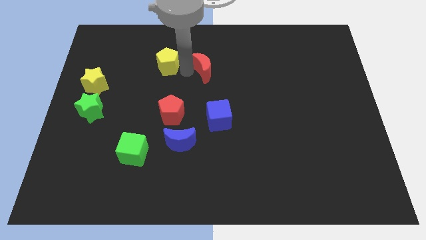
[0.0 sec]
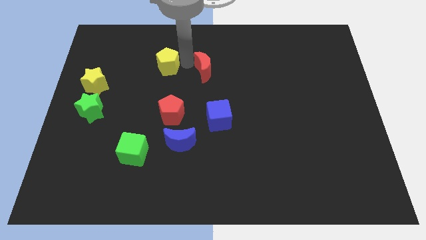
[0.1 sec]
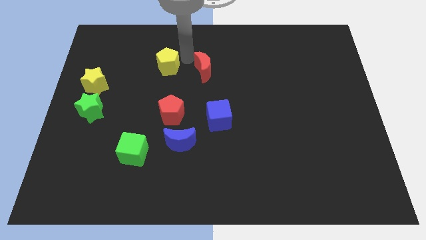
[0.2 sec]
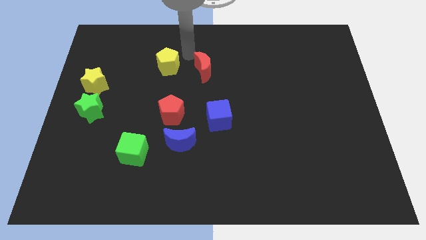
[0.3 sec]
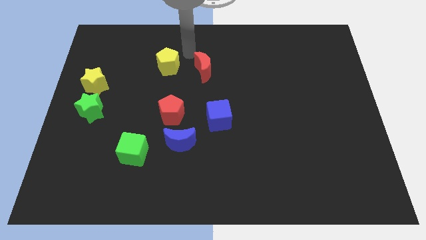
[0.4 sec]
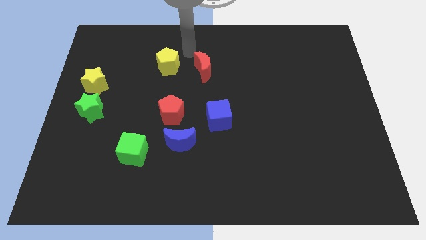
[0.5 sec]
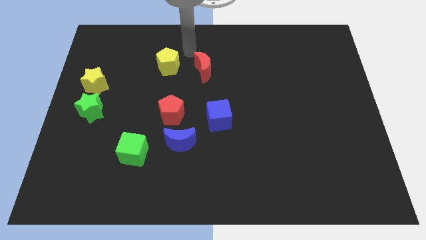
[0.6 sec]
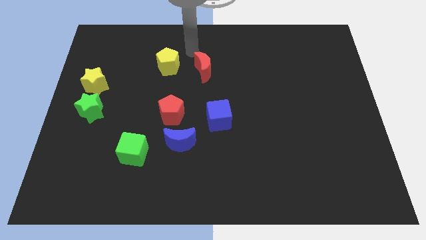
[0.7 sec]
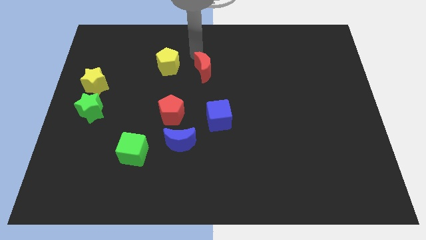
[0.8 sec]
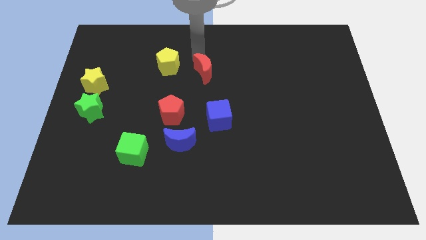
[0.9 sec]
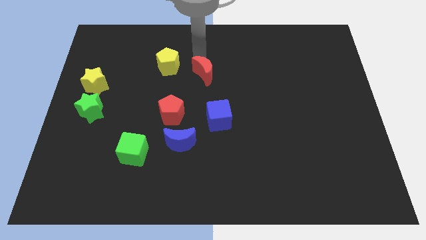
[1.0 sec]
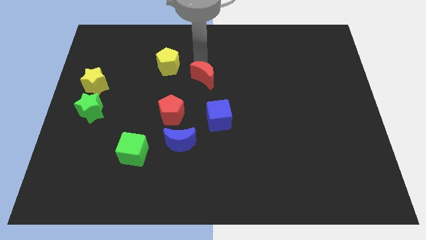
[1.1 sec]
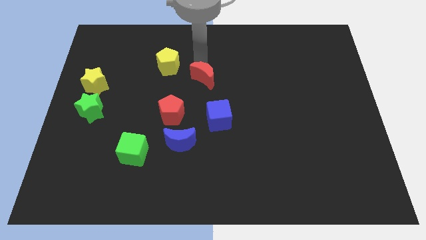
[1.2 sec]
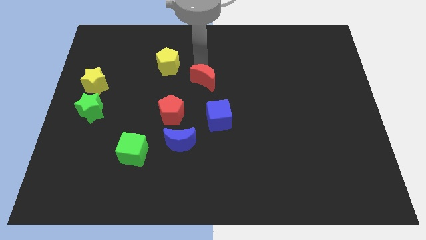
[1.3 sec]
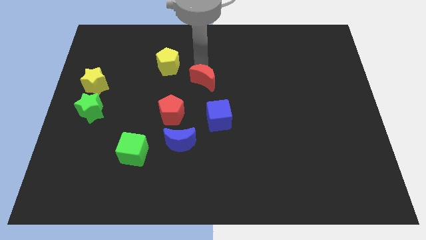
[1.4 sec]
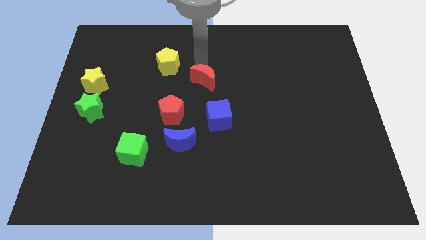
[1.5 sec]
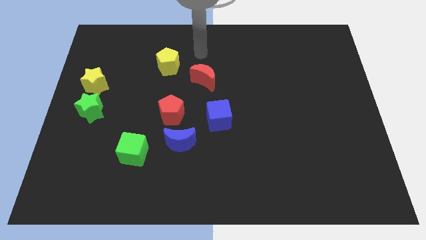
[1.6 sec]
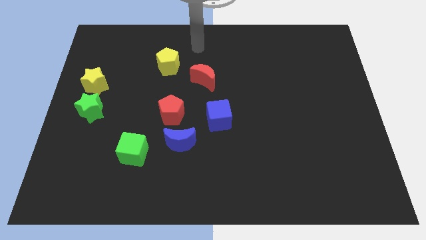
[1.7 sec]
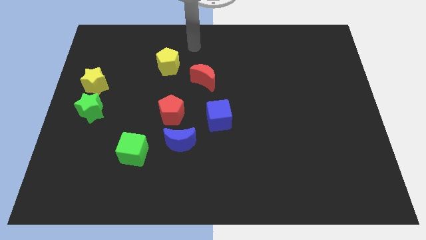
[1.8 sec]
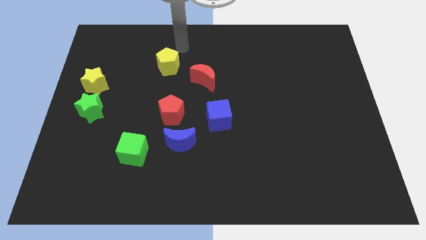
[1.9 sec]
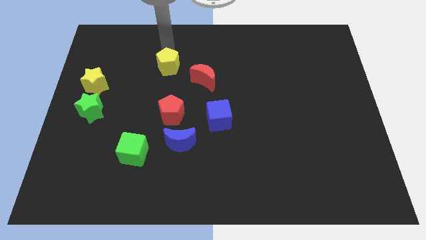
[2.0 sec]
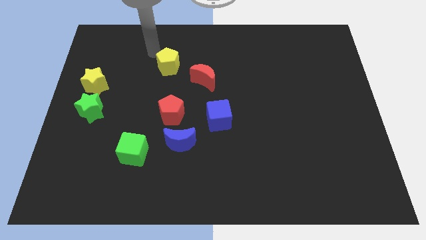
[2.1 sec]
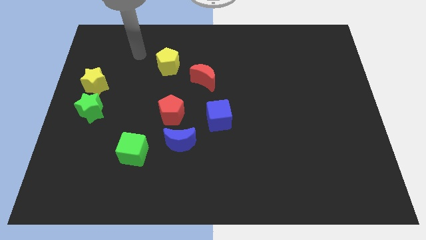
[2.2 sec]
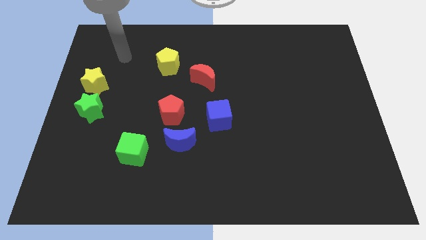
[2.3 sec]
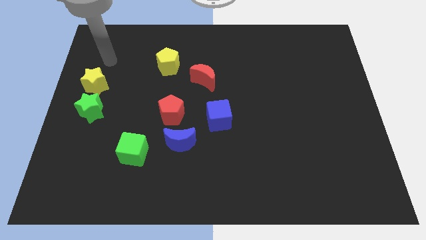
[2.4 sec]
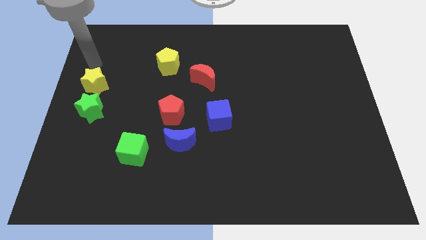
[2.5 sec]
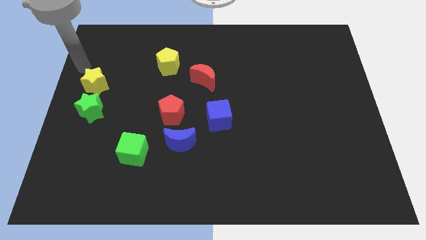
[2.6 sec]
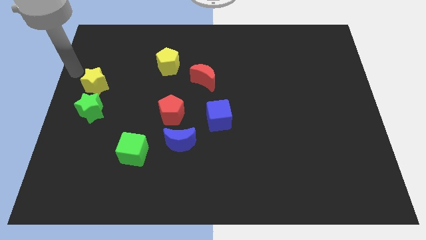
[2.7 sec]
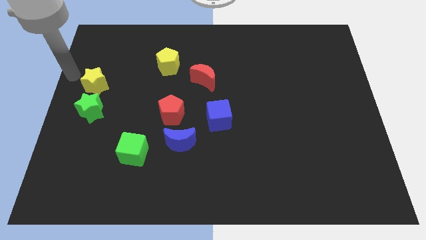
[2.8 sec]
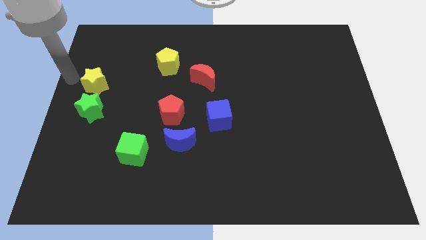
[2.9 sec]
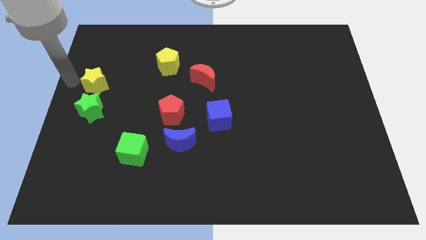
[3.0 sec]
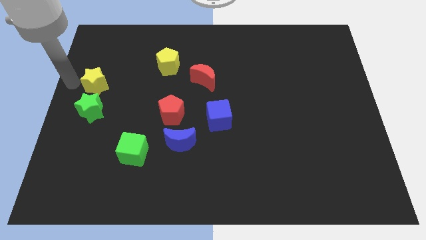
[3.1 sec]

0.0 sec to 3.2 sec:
move the arm to the left of the yellow star

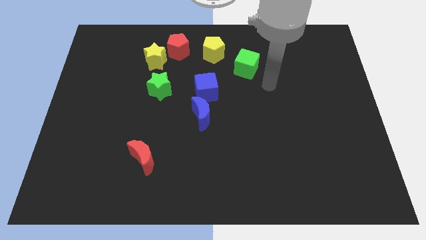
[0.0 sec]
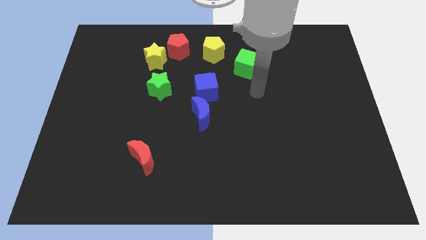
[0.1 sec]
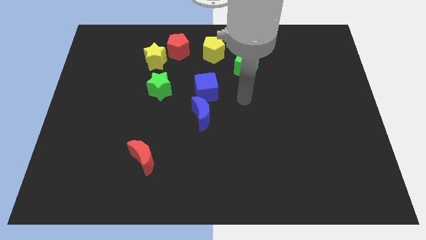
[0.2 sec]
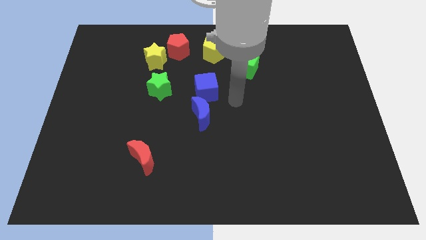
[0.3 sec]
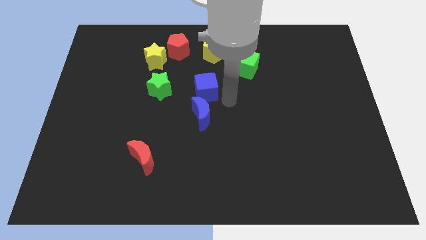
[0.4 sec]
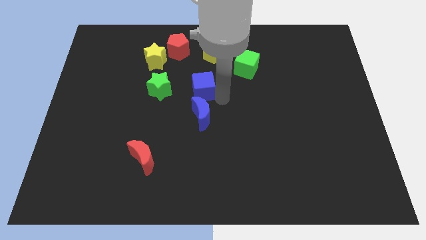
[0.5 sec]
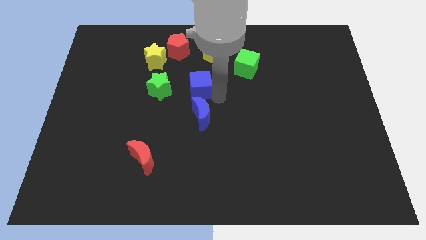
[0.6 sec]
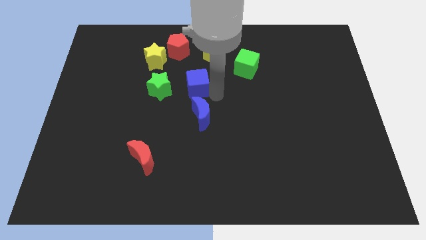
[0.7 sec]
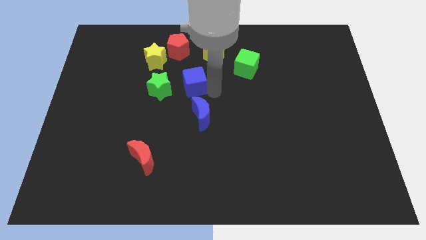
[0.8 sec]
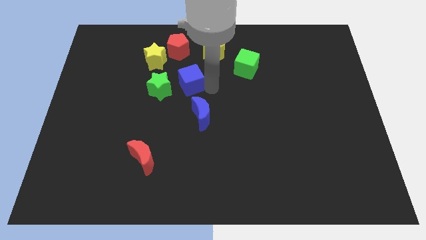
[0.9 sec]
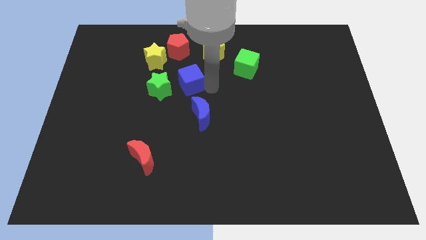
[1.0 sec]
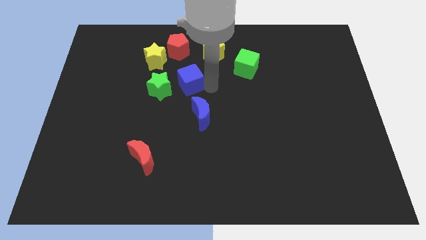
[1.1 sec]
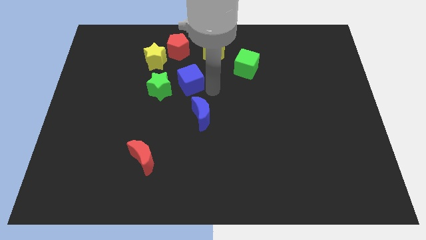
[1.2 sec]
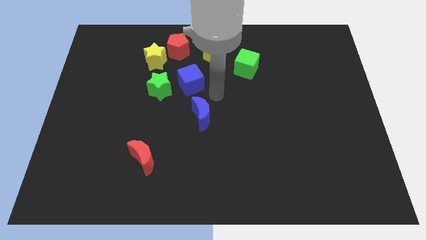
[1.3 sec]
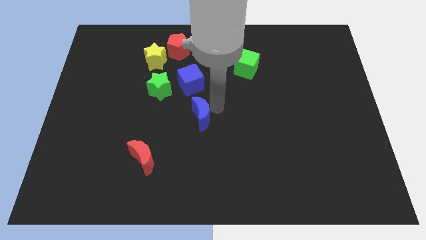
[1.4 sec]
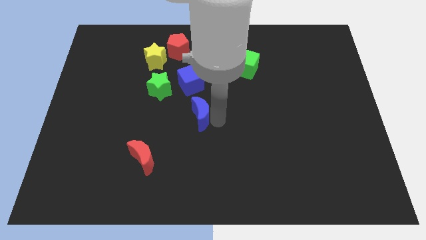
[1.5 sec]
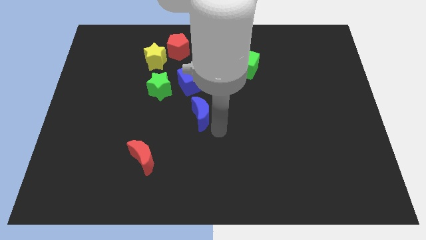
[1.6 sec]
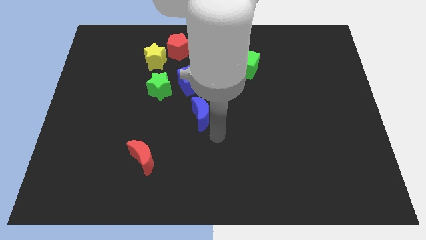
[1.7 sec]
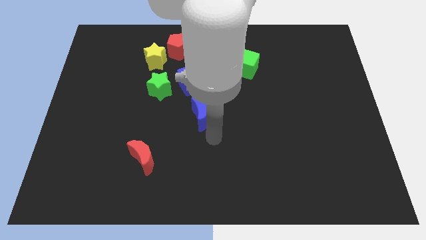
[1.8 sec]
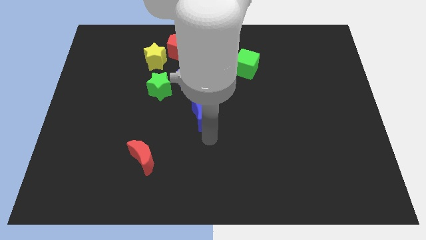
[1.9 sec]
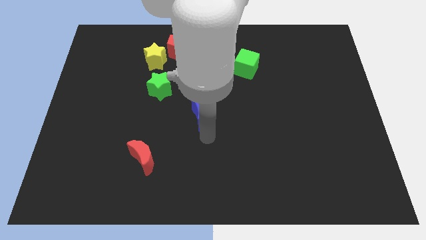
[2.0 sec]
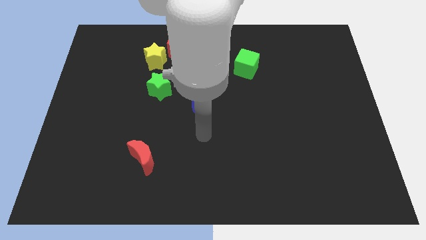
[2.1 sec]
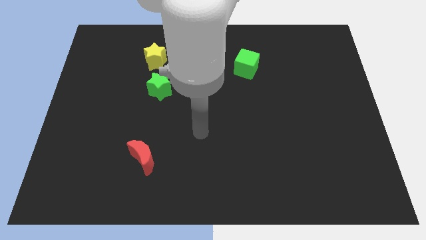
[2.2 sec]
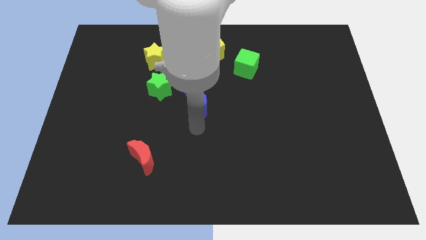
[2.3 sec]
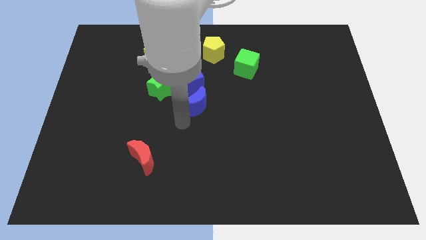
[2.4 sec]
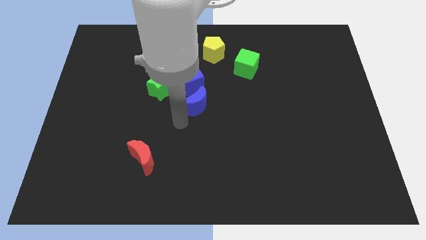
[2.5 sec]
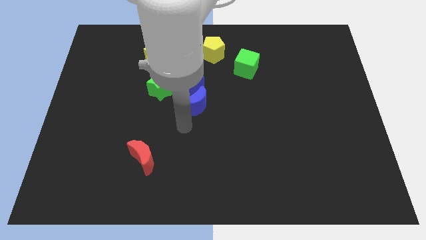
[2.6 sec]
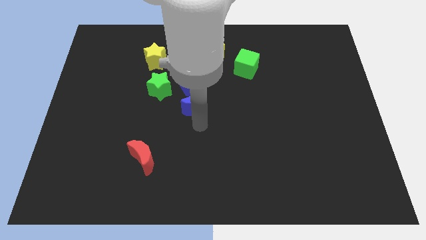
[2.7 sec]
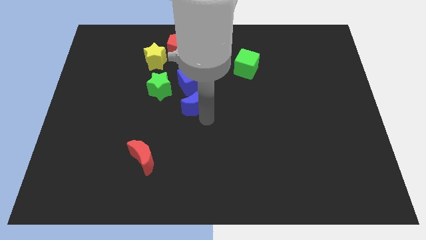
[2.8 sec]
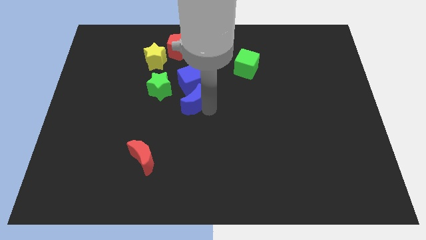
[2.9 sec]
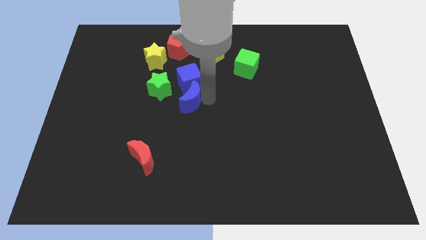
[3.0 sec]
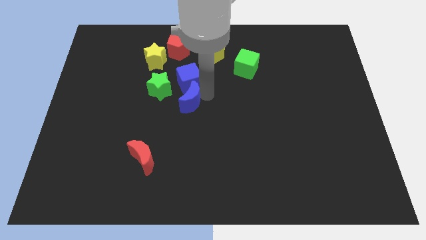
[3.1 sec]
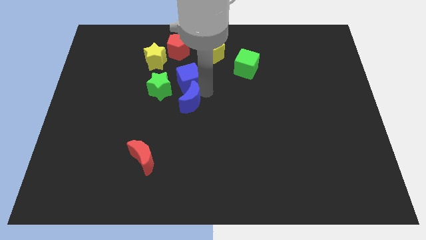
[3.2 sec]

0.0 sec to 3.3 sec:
move the blue blocks slightly to the top

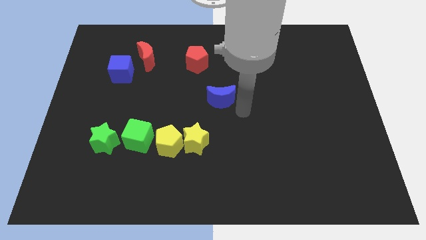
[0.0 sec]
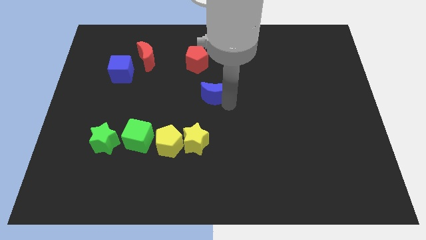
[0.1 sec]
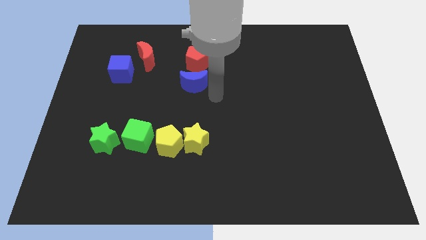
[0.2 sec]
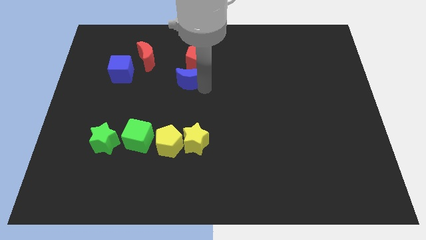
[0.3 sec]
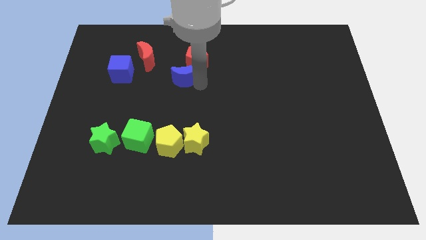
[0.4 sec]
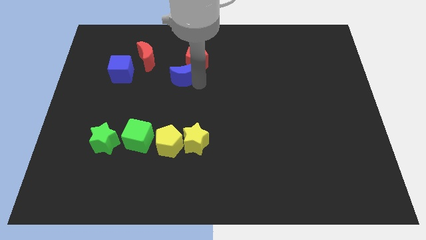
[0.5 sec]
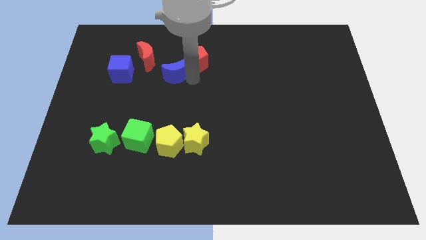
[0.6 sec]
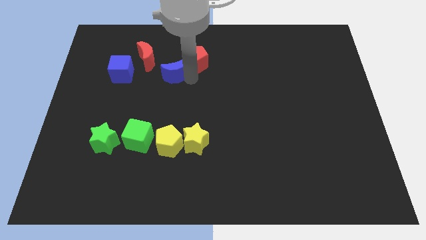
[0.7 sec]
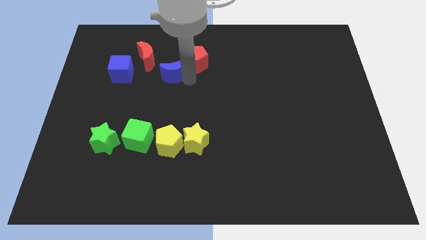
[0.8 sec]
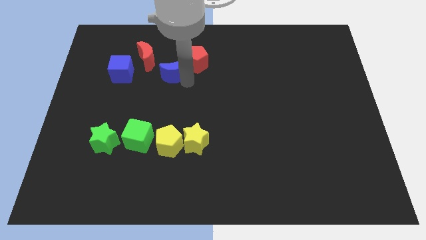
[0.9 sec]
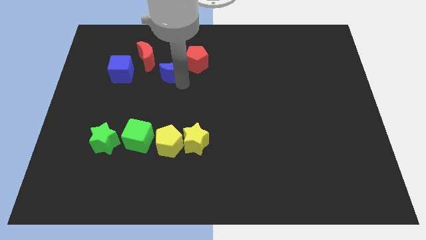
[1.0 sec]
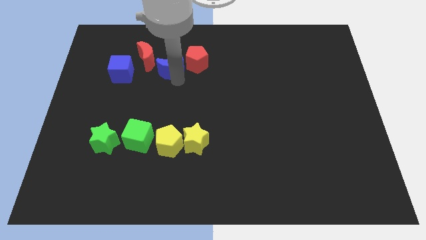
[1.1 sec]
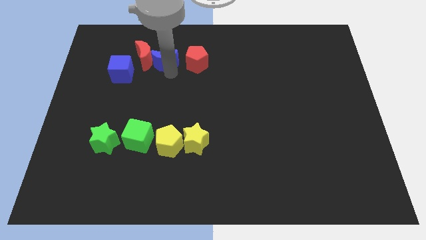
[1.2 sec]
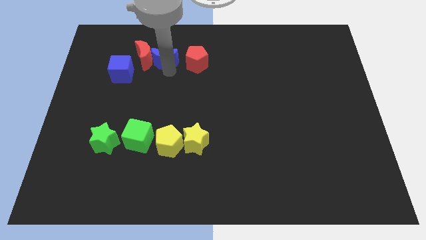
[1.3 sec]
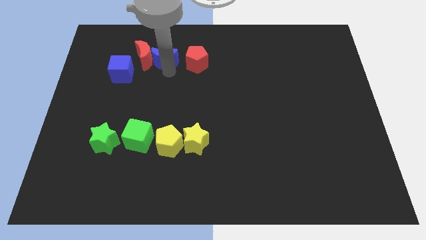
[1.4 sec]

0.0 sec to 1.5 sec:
place the blue crescent horizontally in between both the red blocks

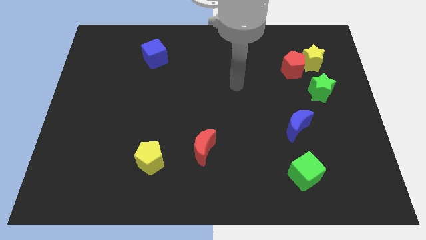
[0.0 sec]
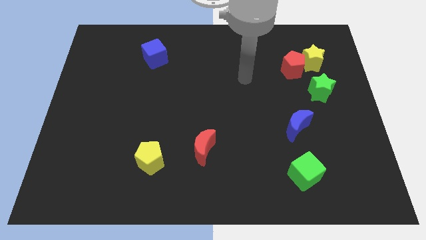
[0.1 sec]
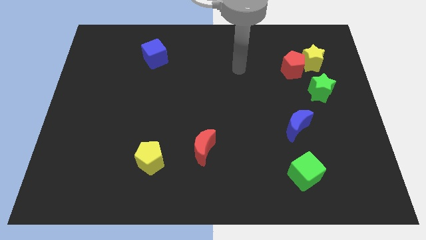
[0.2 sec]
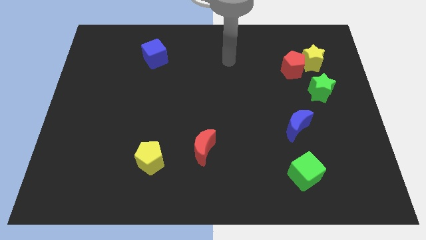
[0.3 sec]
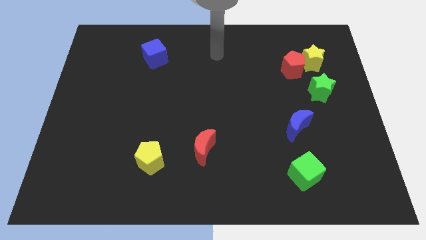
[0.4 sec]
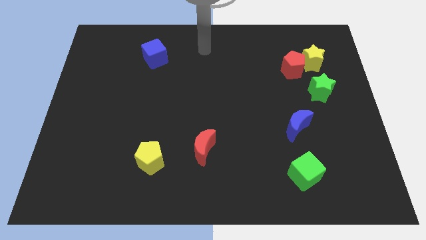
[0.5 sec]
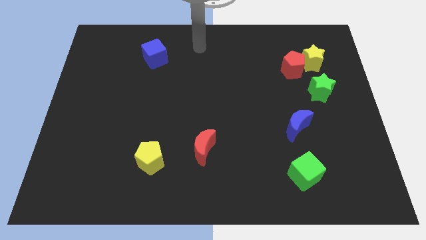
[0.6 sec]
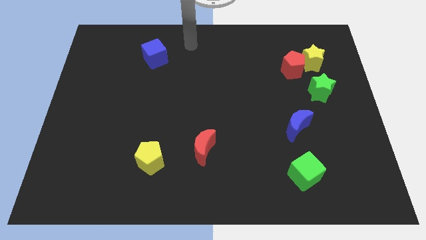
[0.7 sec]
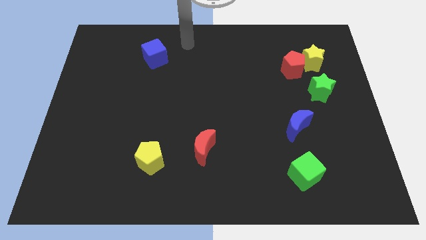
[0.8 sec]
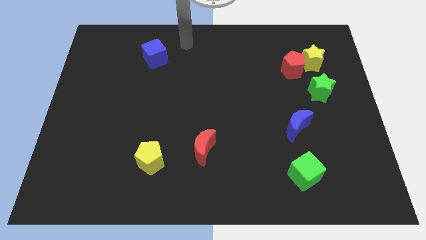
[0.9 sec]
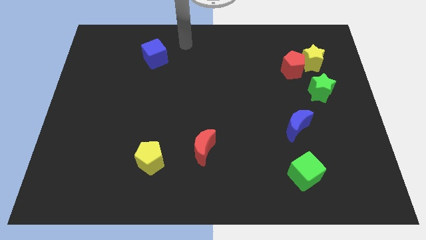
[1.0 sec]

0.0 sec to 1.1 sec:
slide your arm to the top right of blue cube
